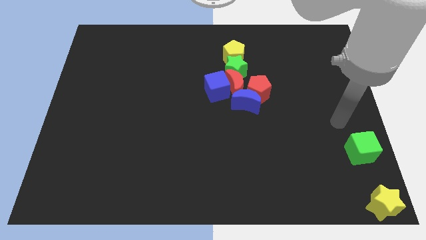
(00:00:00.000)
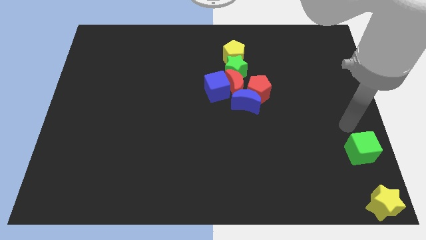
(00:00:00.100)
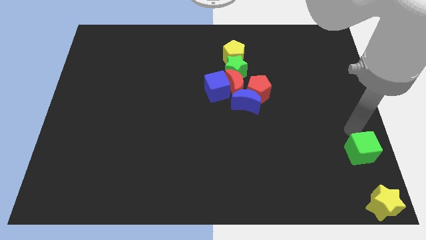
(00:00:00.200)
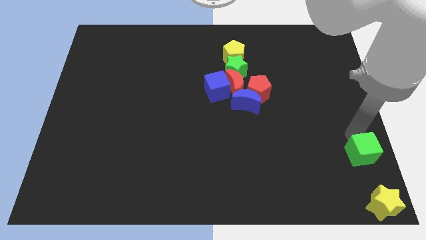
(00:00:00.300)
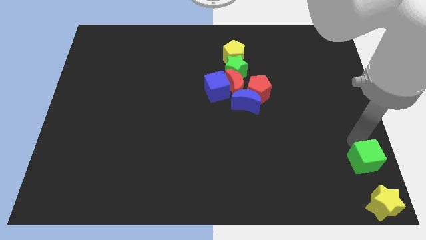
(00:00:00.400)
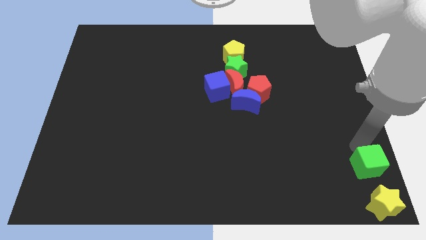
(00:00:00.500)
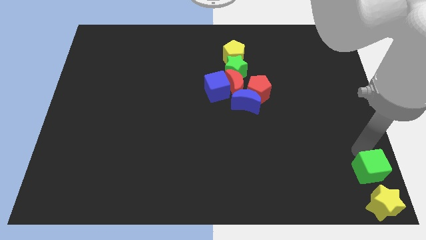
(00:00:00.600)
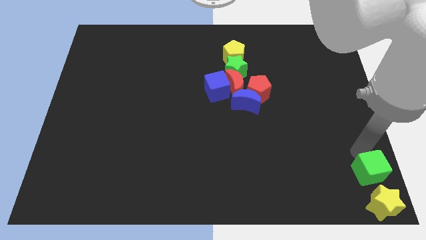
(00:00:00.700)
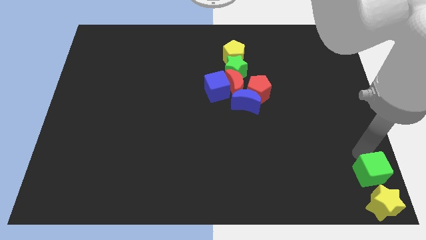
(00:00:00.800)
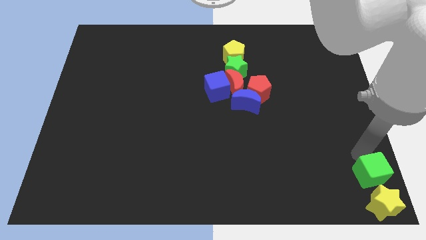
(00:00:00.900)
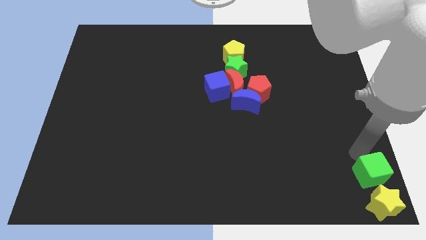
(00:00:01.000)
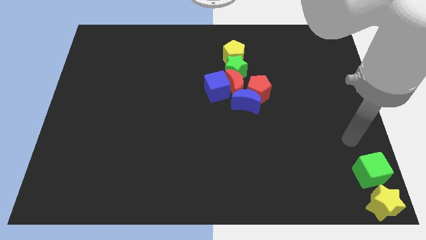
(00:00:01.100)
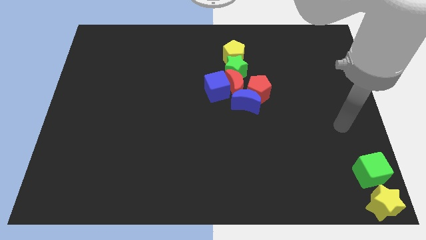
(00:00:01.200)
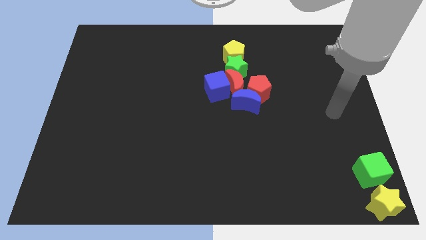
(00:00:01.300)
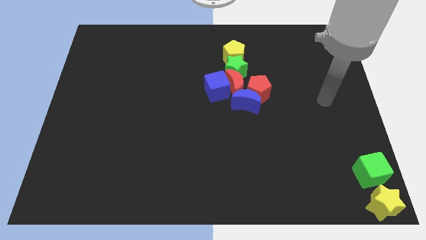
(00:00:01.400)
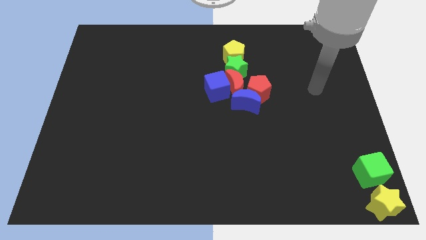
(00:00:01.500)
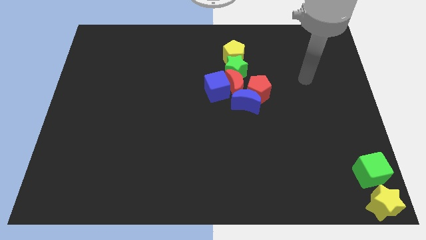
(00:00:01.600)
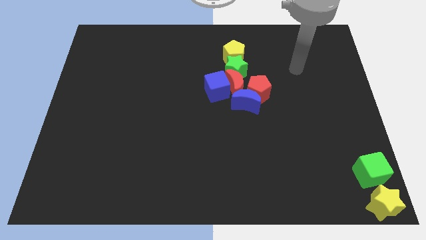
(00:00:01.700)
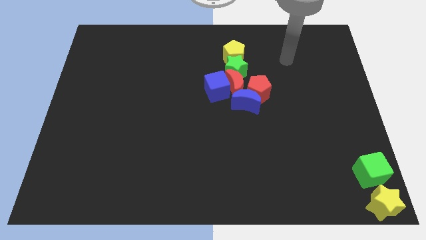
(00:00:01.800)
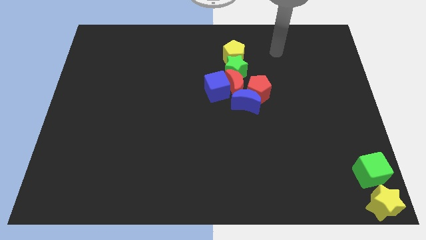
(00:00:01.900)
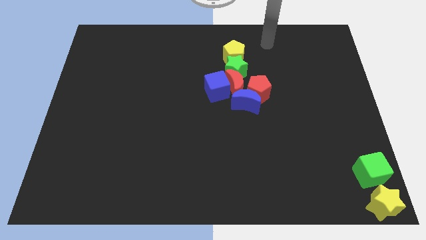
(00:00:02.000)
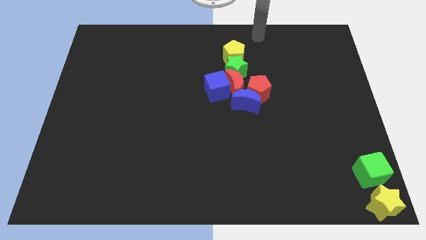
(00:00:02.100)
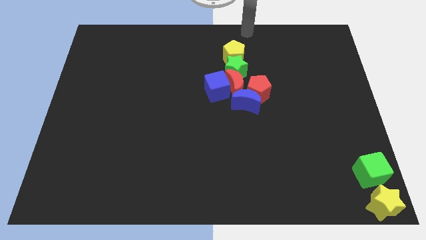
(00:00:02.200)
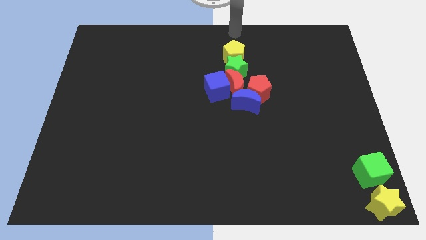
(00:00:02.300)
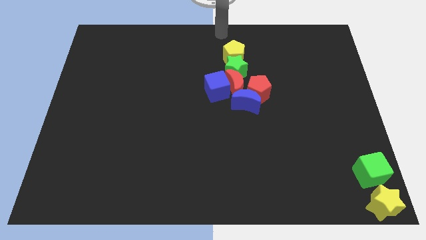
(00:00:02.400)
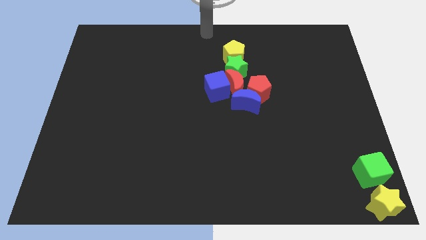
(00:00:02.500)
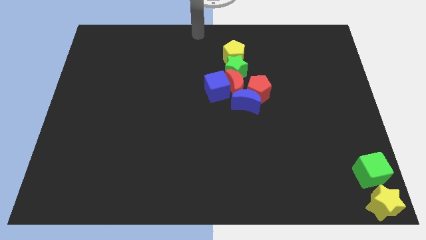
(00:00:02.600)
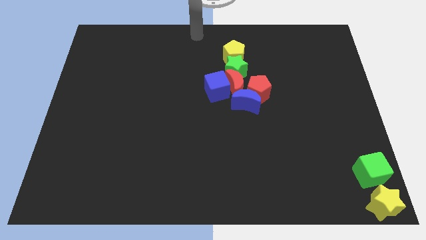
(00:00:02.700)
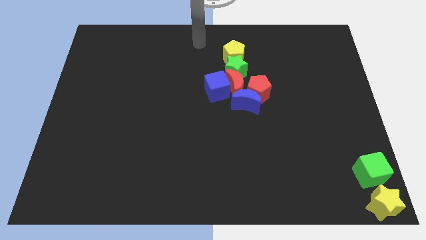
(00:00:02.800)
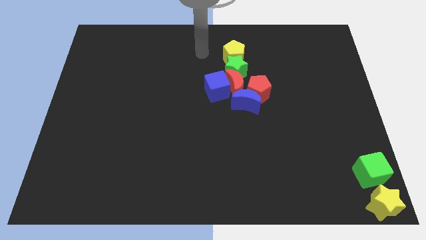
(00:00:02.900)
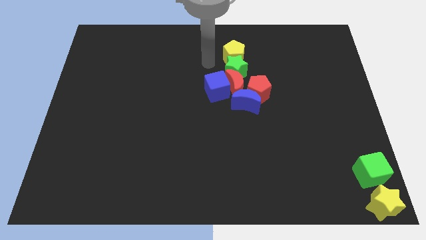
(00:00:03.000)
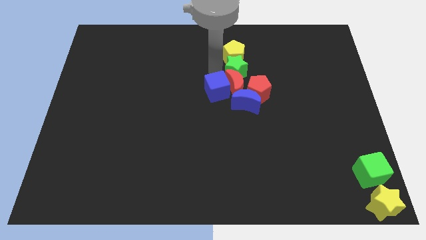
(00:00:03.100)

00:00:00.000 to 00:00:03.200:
push the green cube into the yellow star

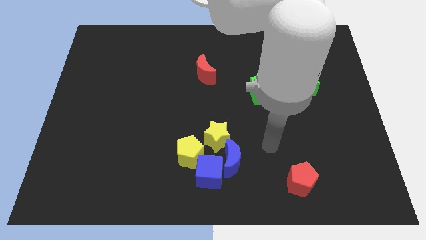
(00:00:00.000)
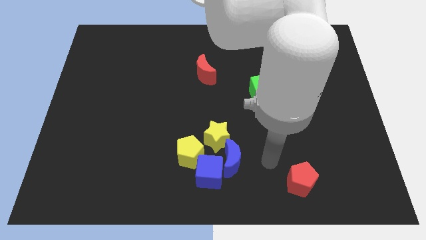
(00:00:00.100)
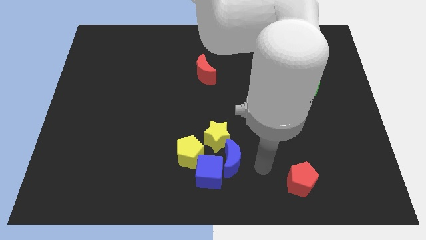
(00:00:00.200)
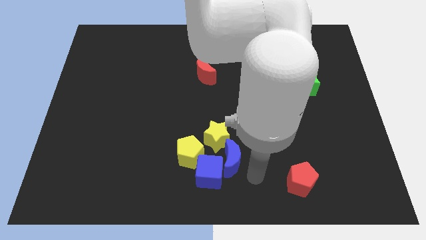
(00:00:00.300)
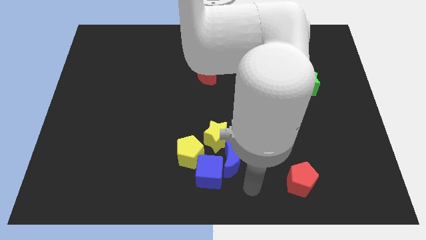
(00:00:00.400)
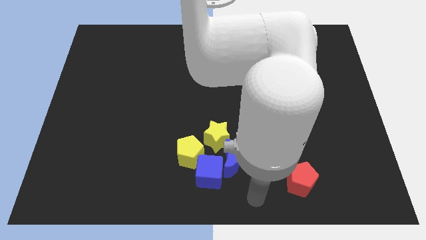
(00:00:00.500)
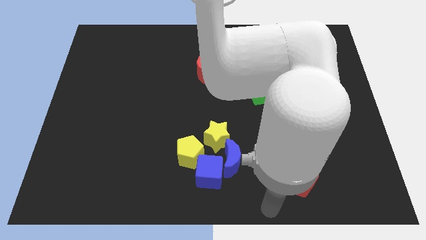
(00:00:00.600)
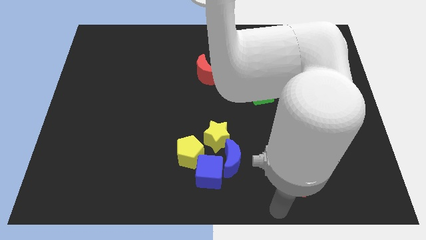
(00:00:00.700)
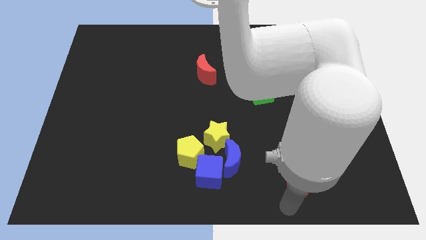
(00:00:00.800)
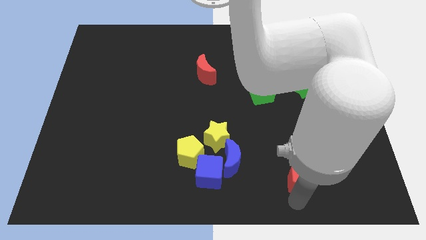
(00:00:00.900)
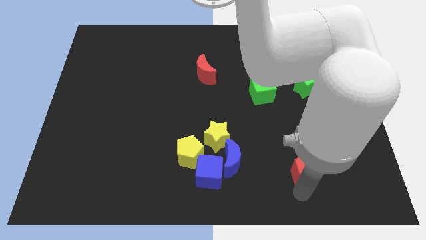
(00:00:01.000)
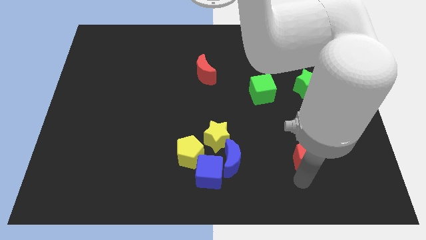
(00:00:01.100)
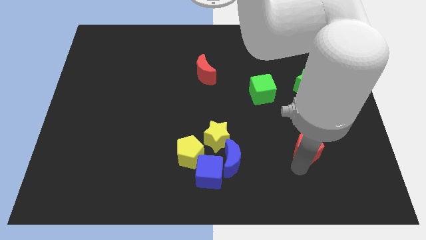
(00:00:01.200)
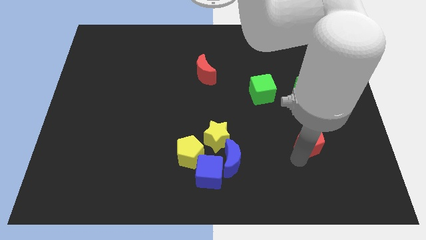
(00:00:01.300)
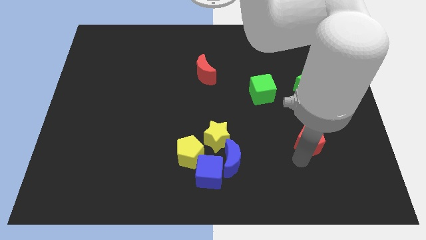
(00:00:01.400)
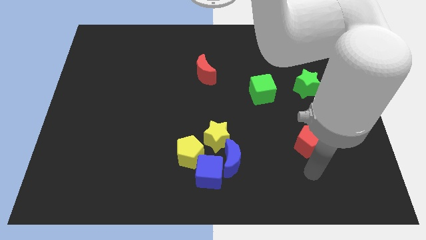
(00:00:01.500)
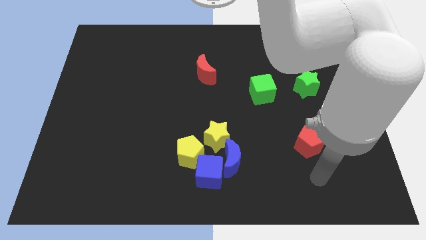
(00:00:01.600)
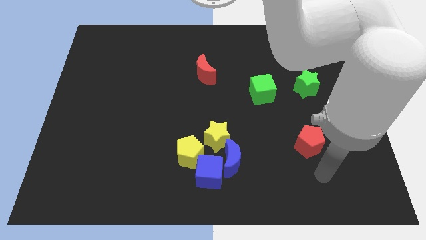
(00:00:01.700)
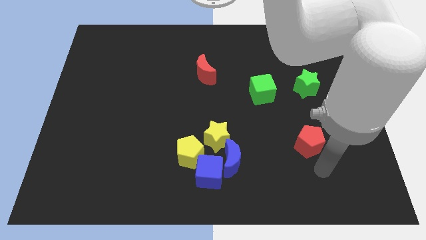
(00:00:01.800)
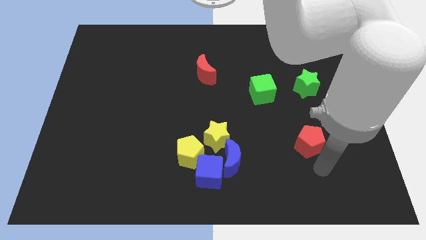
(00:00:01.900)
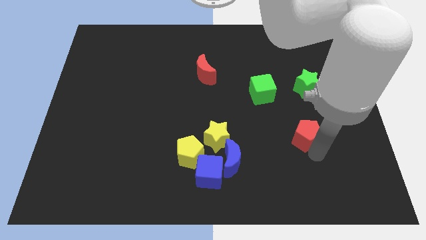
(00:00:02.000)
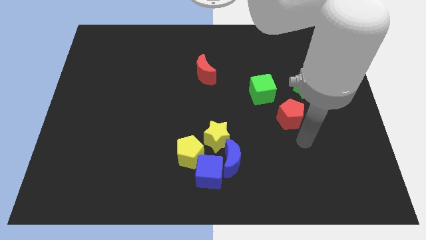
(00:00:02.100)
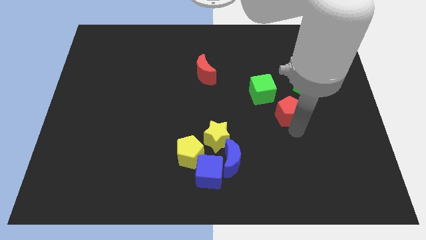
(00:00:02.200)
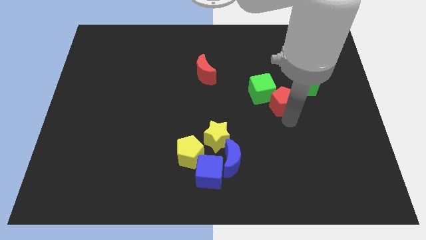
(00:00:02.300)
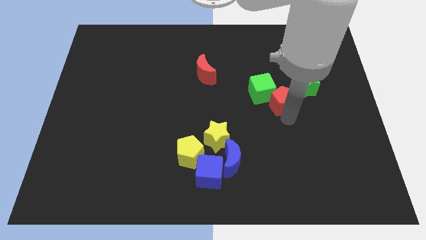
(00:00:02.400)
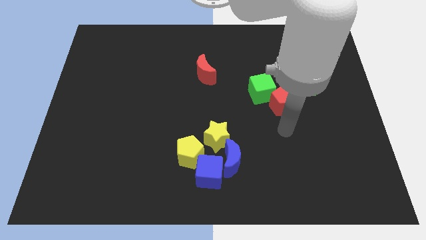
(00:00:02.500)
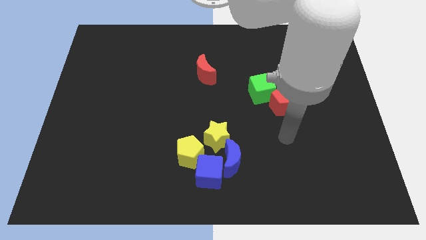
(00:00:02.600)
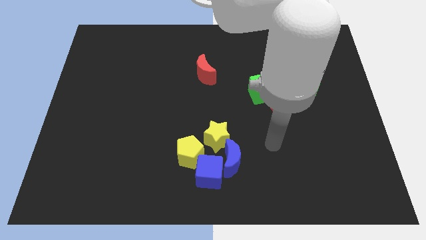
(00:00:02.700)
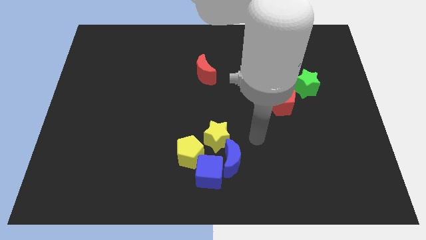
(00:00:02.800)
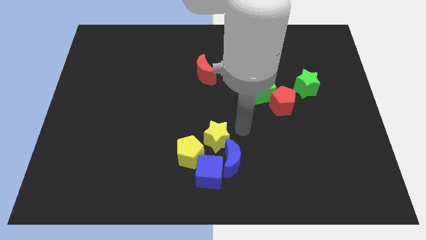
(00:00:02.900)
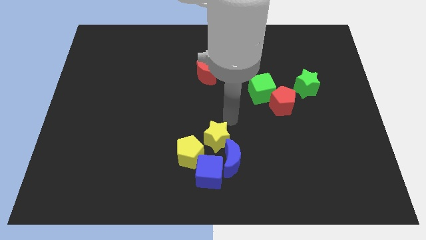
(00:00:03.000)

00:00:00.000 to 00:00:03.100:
place the red pentagon below the green cube

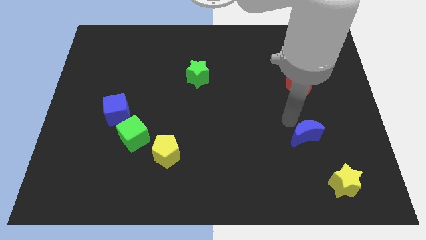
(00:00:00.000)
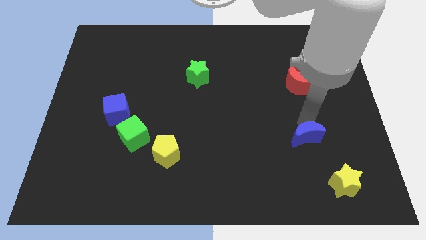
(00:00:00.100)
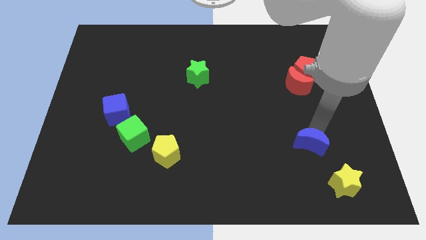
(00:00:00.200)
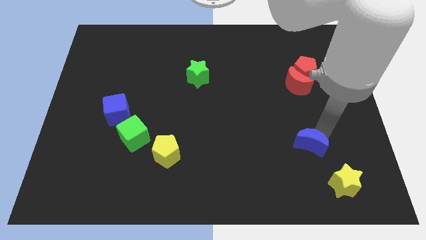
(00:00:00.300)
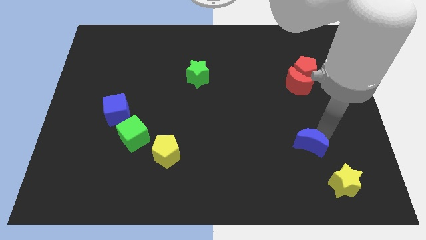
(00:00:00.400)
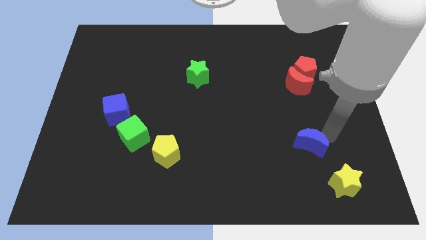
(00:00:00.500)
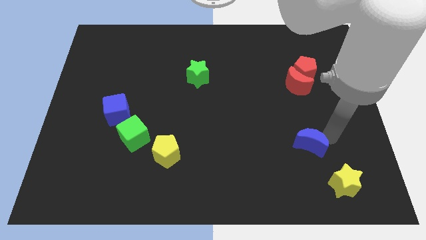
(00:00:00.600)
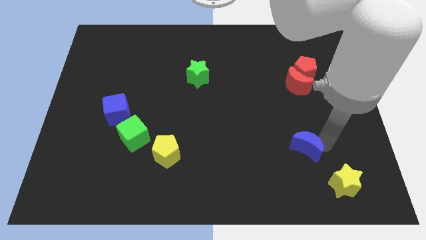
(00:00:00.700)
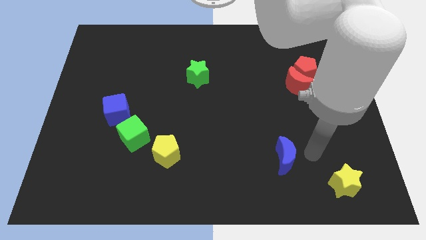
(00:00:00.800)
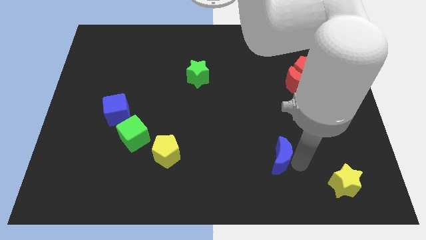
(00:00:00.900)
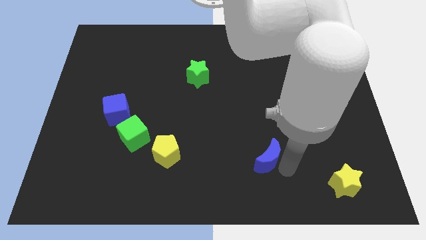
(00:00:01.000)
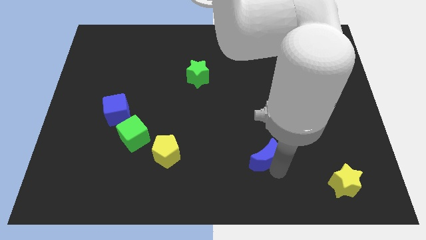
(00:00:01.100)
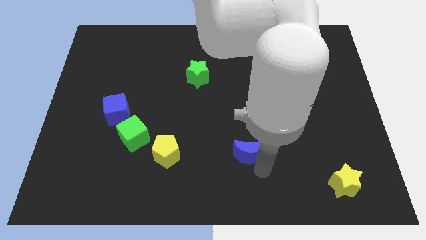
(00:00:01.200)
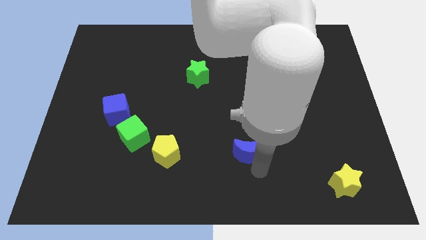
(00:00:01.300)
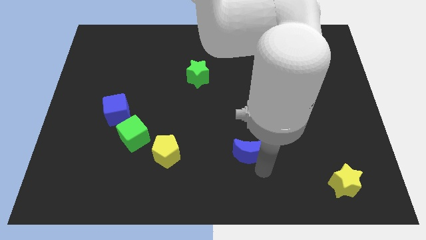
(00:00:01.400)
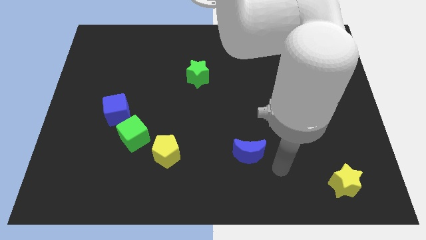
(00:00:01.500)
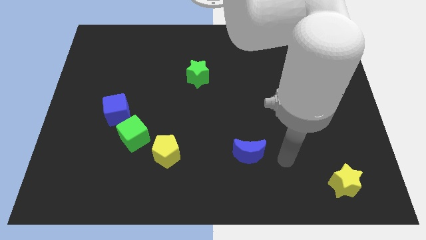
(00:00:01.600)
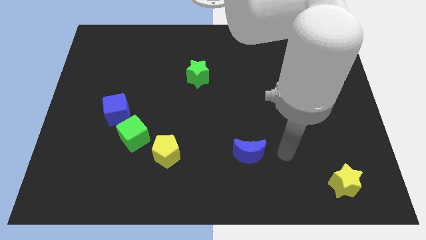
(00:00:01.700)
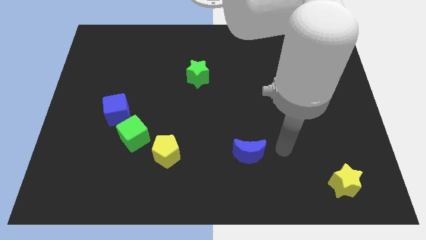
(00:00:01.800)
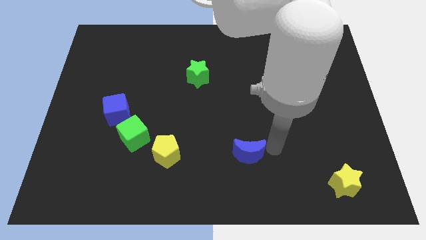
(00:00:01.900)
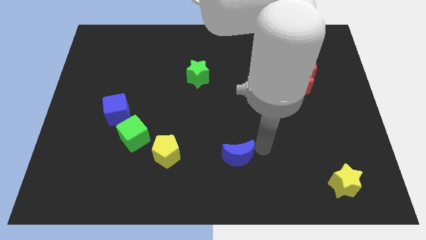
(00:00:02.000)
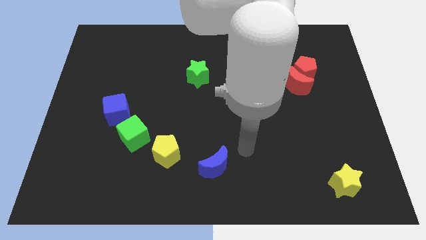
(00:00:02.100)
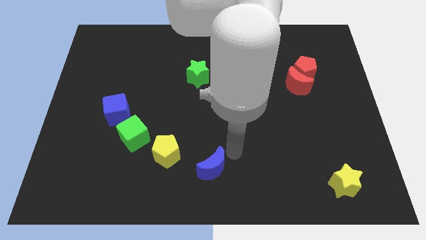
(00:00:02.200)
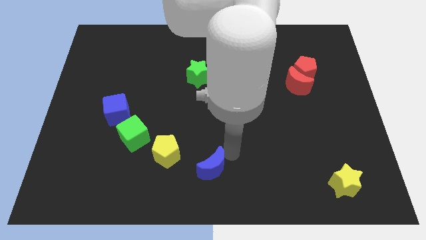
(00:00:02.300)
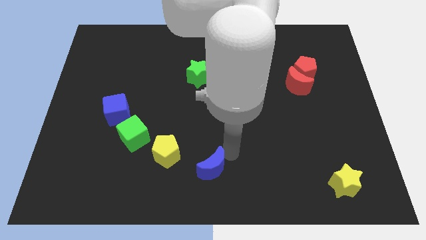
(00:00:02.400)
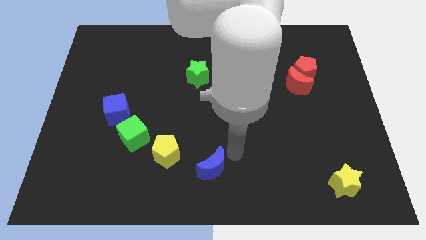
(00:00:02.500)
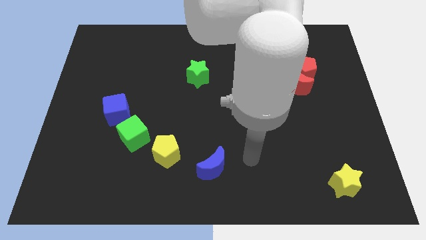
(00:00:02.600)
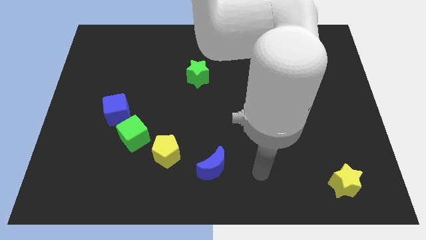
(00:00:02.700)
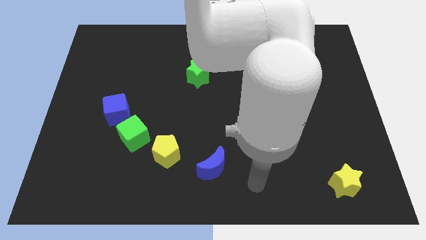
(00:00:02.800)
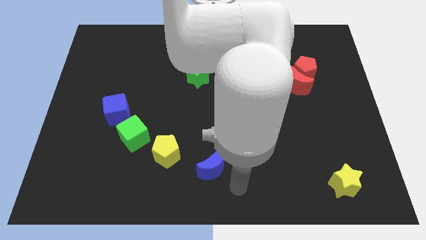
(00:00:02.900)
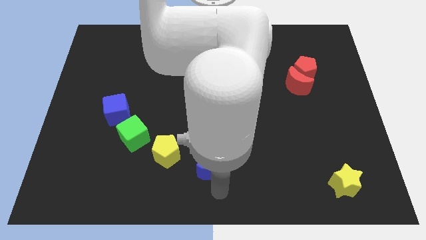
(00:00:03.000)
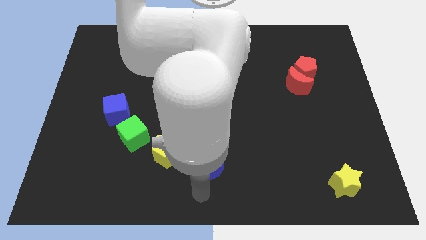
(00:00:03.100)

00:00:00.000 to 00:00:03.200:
move the blue crescent to the bottom right side of the yellow pentagon
